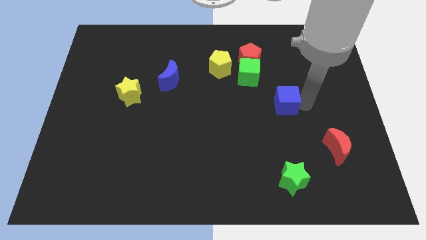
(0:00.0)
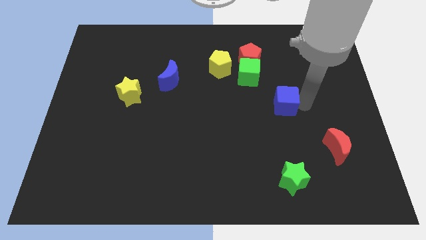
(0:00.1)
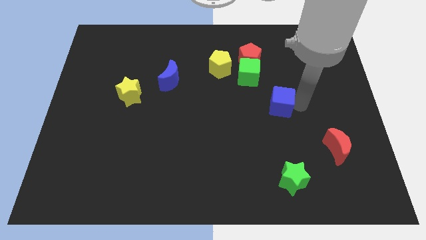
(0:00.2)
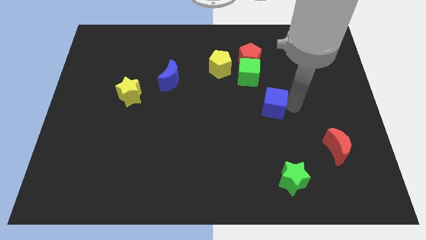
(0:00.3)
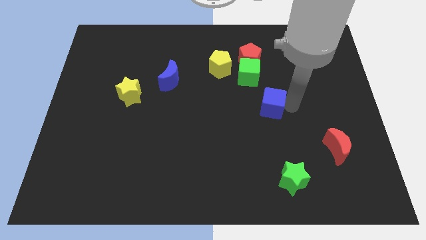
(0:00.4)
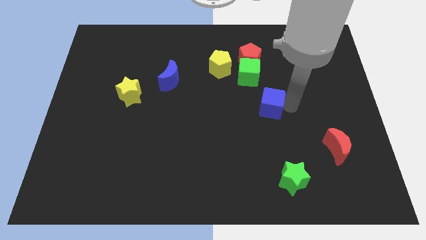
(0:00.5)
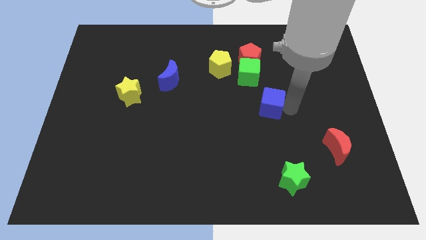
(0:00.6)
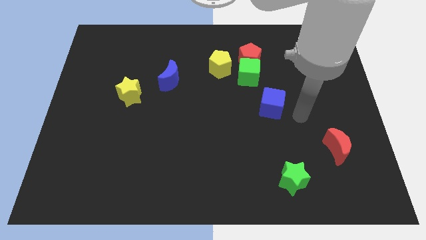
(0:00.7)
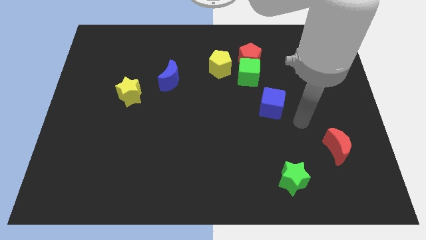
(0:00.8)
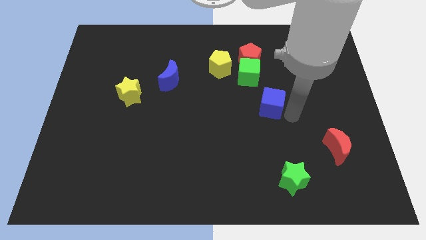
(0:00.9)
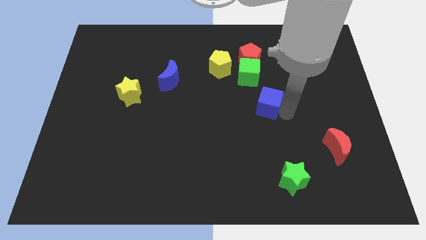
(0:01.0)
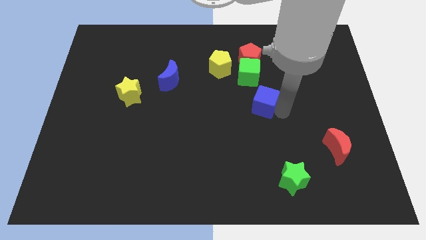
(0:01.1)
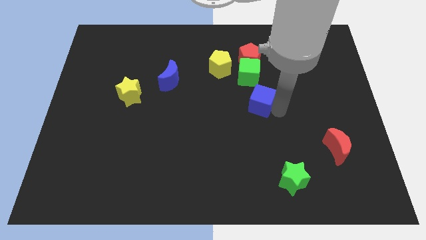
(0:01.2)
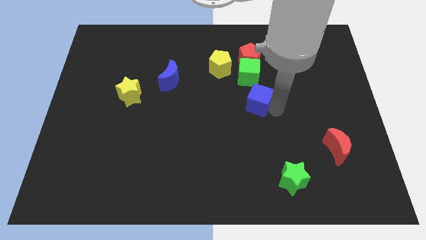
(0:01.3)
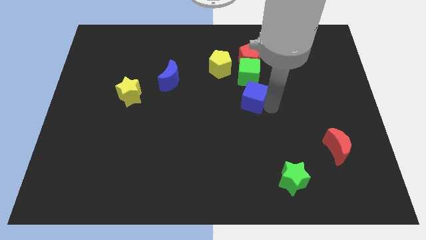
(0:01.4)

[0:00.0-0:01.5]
place the blue cube below the green cube

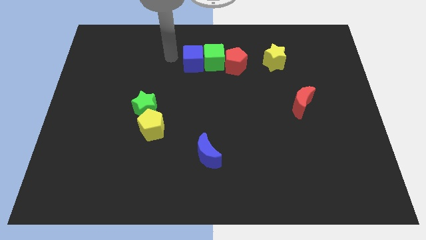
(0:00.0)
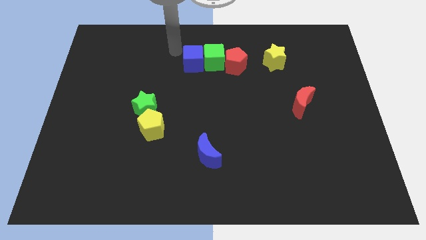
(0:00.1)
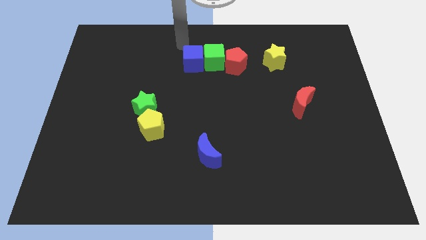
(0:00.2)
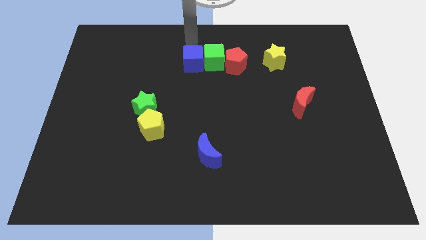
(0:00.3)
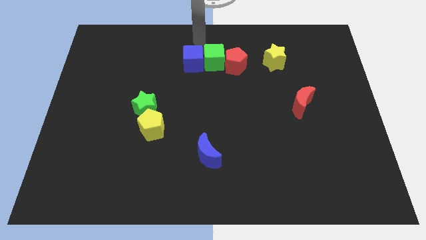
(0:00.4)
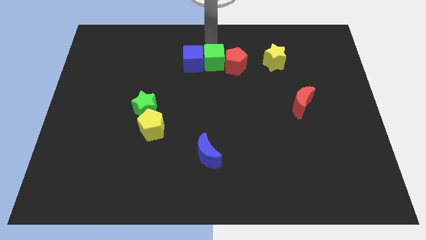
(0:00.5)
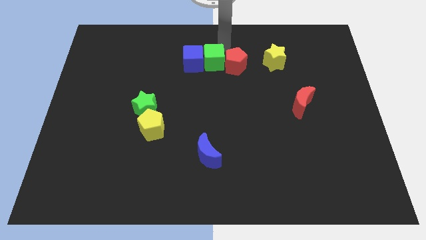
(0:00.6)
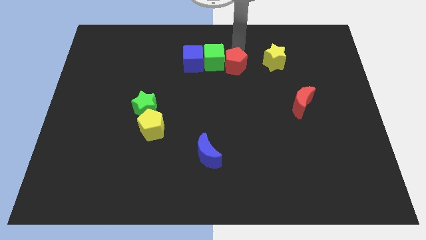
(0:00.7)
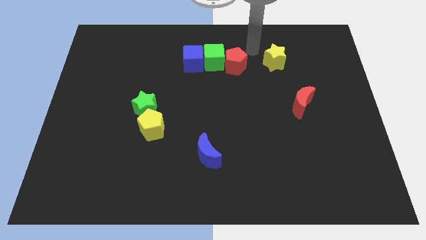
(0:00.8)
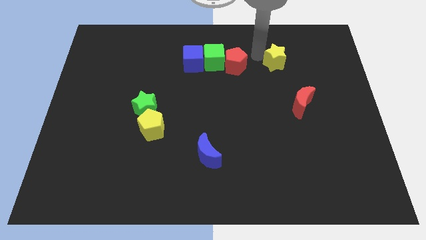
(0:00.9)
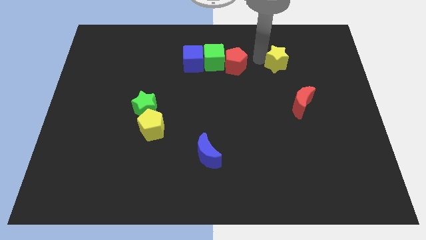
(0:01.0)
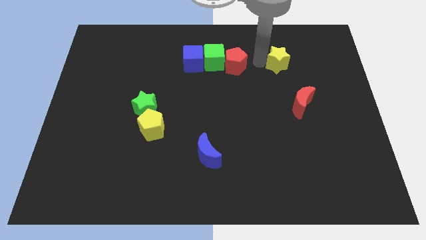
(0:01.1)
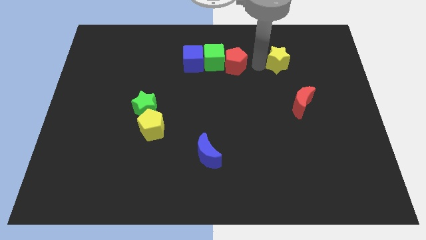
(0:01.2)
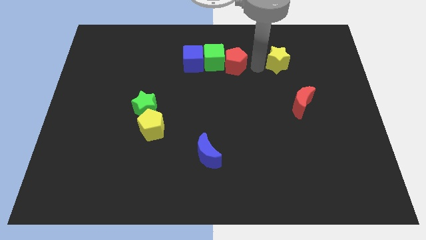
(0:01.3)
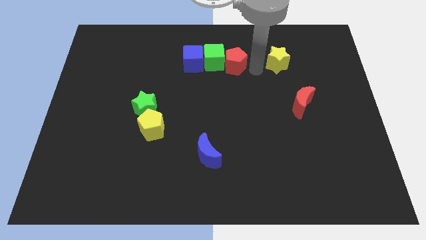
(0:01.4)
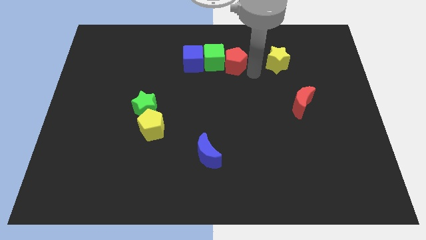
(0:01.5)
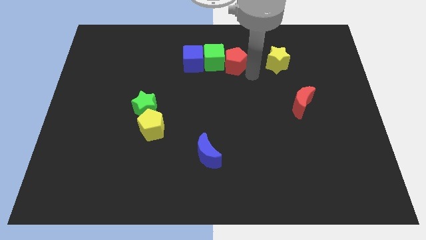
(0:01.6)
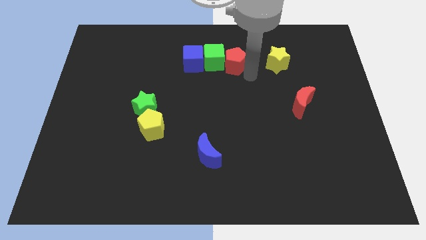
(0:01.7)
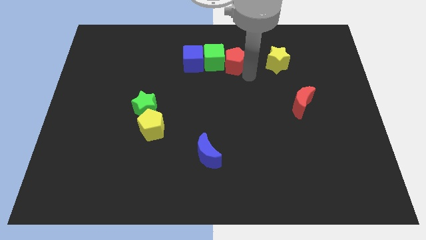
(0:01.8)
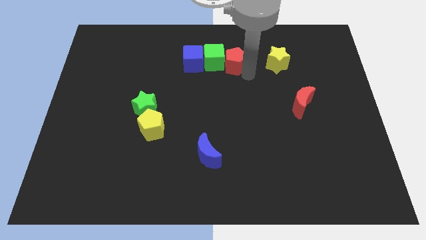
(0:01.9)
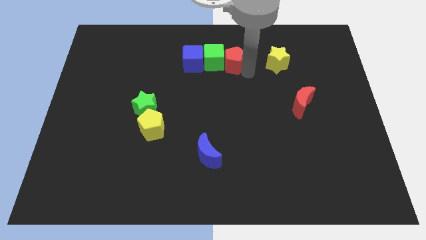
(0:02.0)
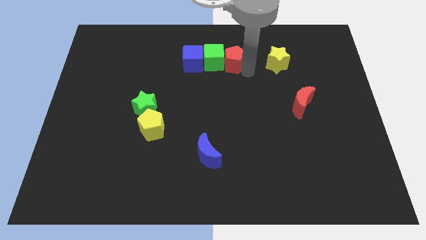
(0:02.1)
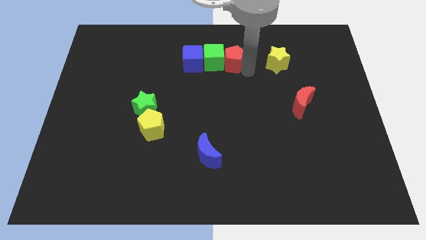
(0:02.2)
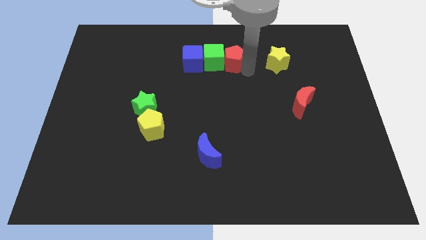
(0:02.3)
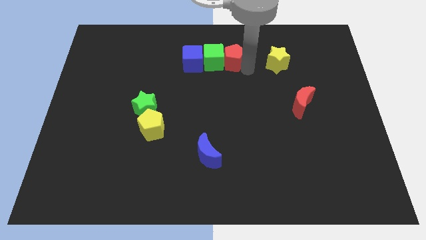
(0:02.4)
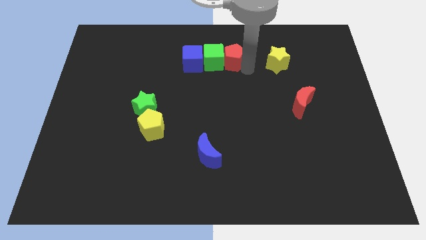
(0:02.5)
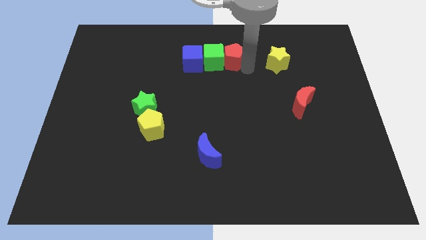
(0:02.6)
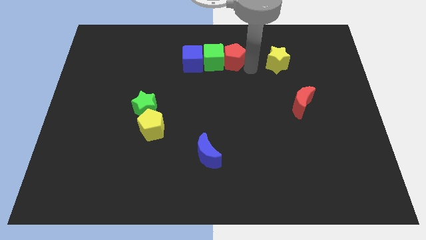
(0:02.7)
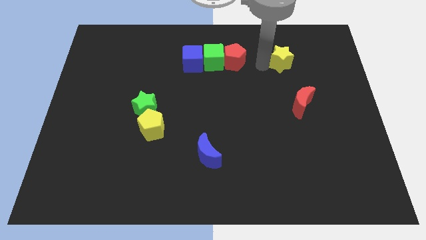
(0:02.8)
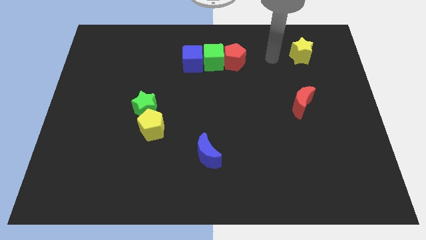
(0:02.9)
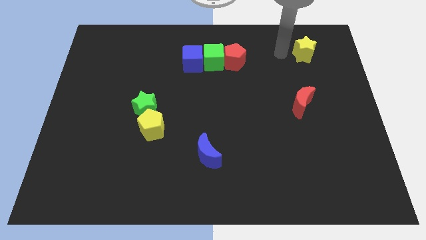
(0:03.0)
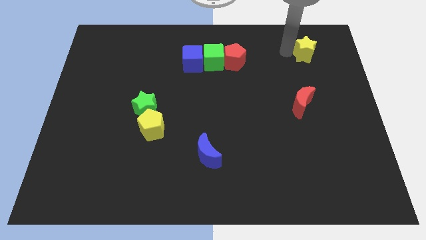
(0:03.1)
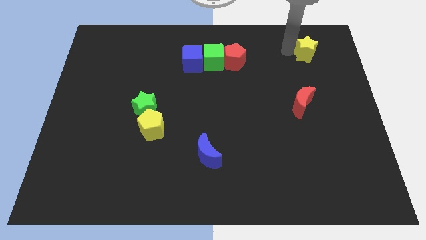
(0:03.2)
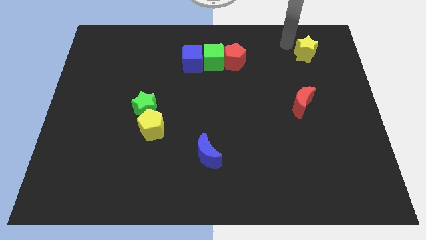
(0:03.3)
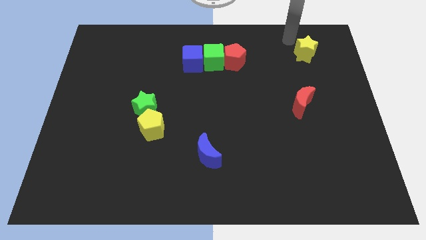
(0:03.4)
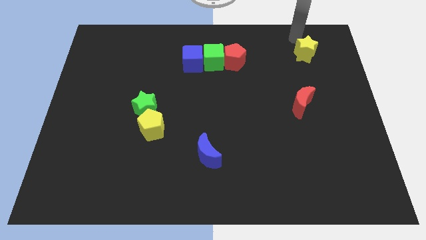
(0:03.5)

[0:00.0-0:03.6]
move the yellow star to the top right

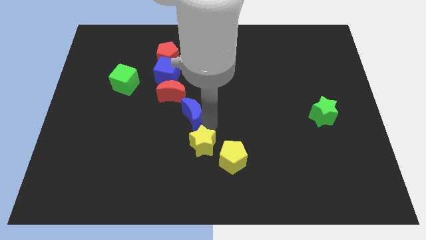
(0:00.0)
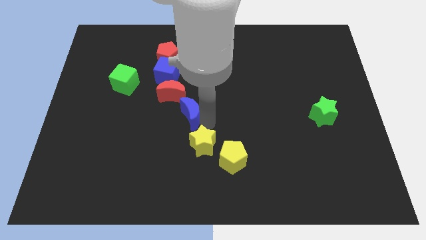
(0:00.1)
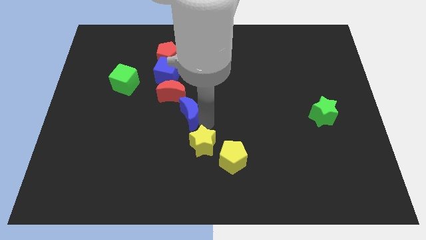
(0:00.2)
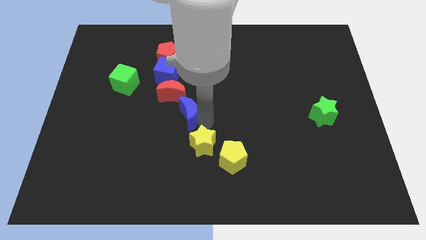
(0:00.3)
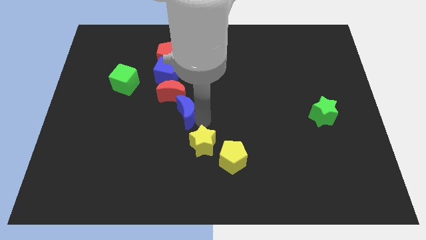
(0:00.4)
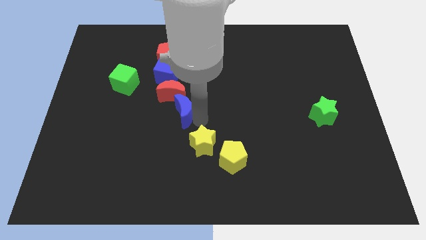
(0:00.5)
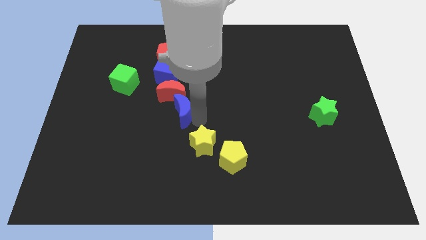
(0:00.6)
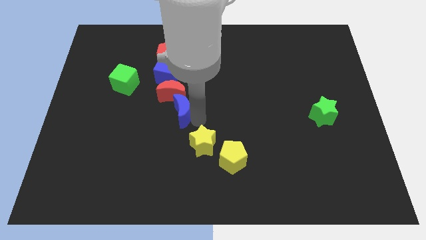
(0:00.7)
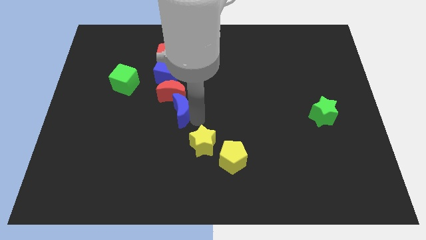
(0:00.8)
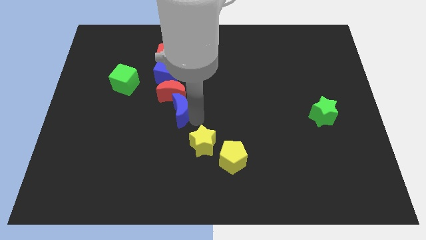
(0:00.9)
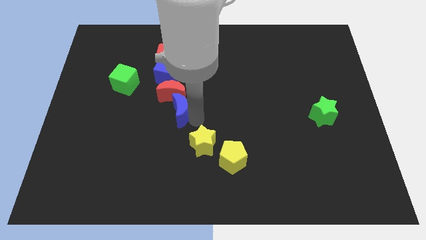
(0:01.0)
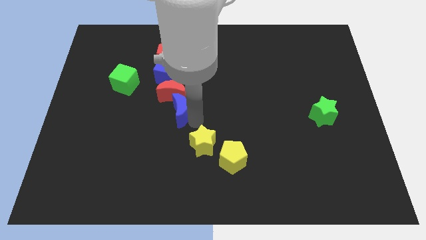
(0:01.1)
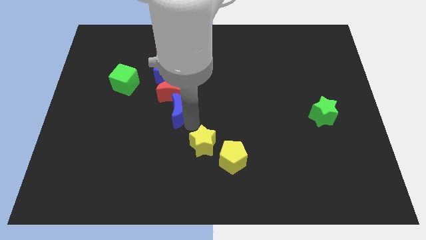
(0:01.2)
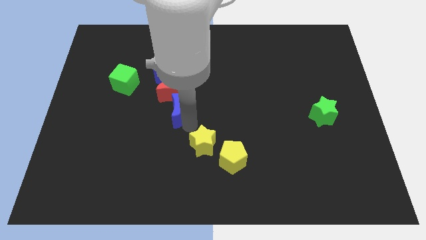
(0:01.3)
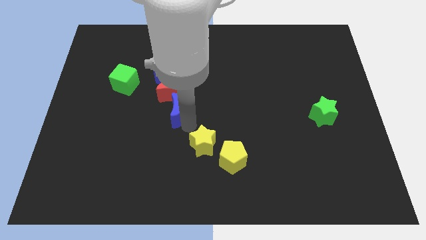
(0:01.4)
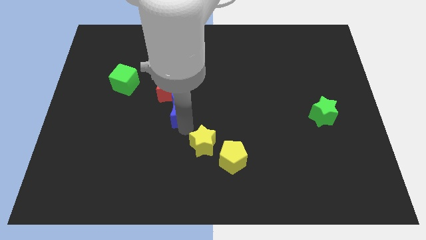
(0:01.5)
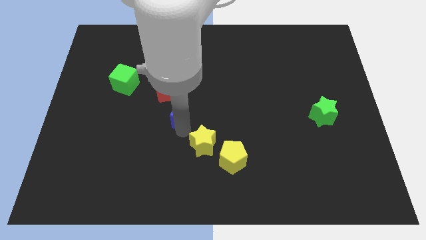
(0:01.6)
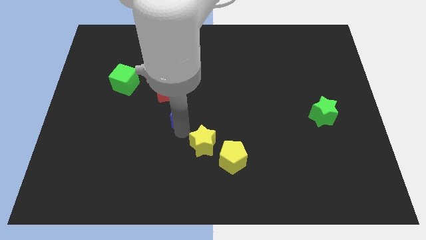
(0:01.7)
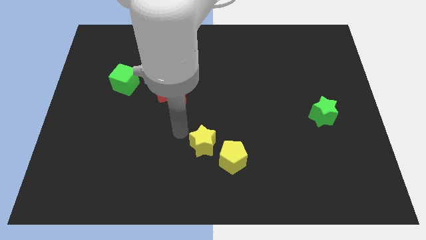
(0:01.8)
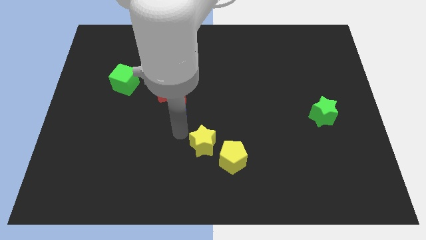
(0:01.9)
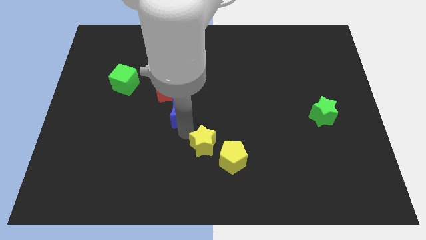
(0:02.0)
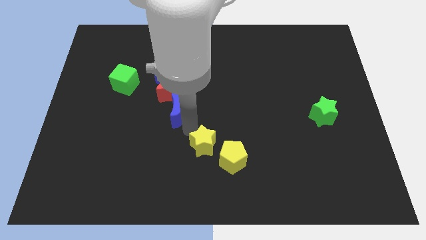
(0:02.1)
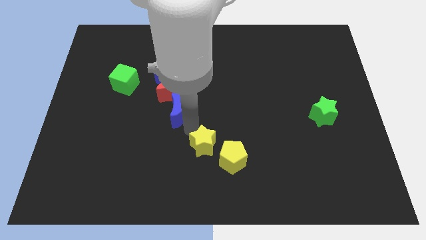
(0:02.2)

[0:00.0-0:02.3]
slide the blue crescent slightly to the left

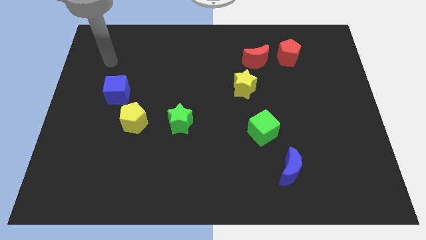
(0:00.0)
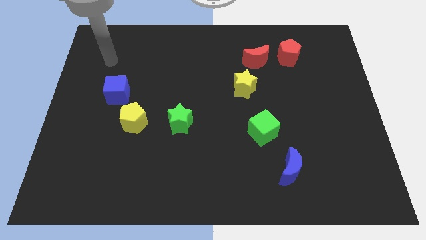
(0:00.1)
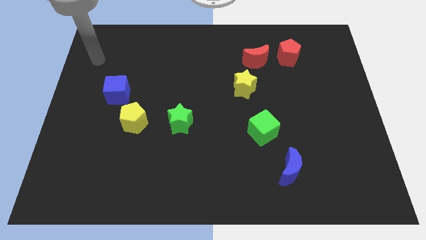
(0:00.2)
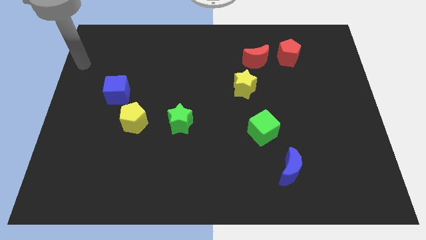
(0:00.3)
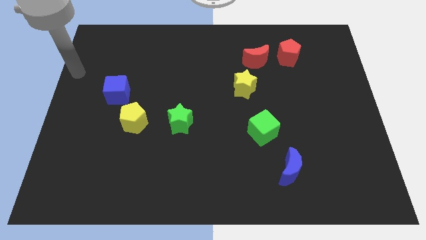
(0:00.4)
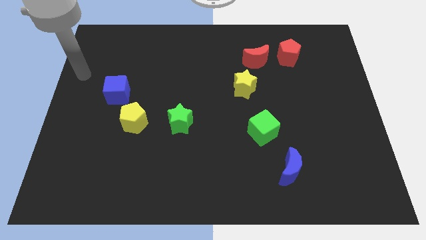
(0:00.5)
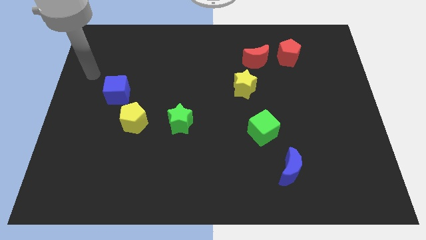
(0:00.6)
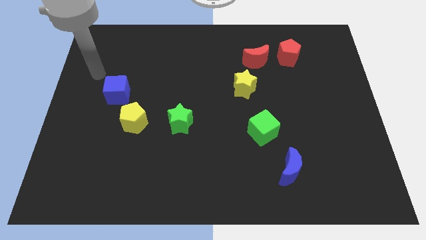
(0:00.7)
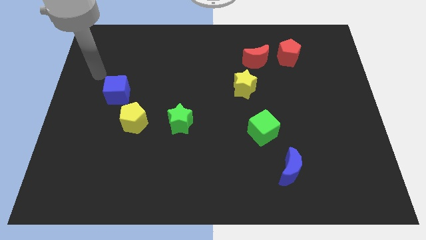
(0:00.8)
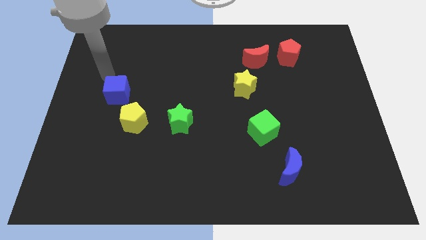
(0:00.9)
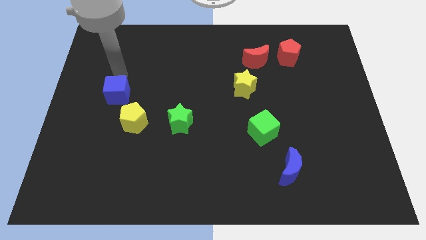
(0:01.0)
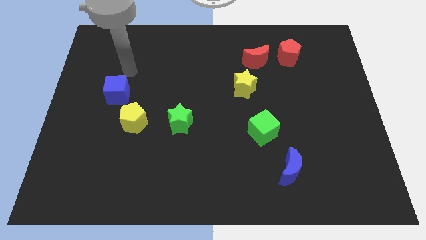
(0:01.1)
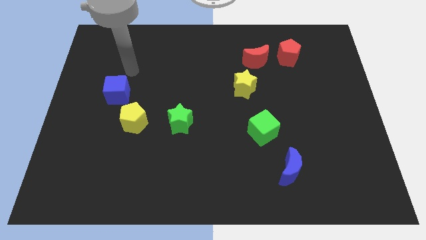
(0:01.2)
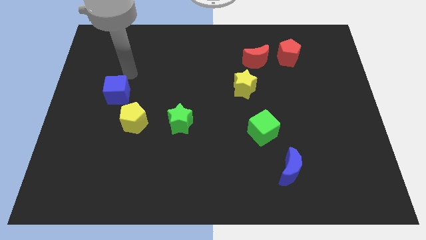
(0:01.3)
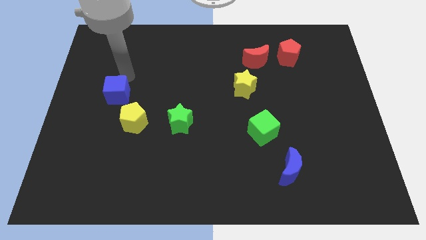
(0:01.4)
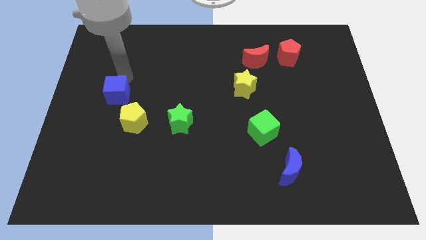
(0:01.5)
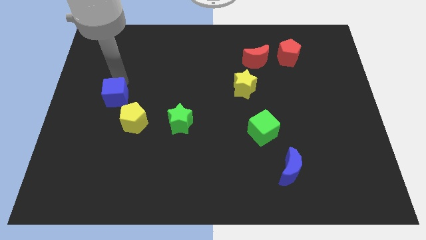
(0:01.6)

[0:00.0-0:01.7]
tap the blue cube
